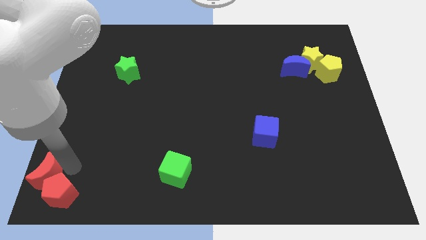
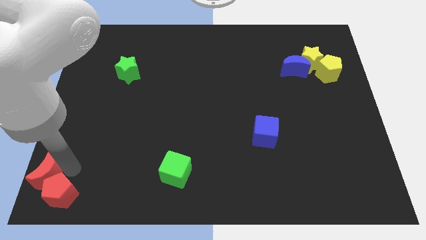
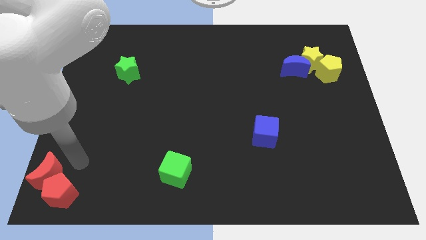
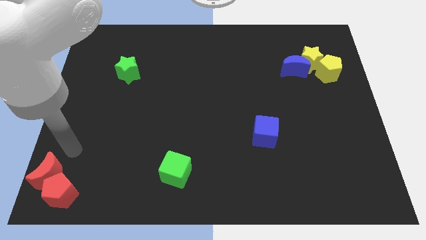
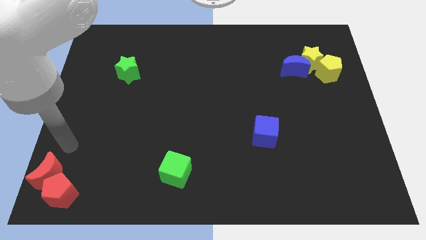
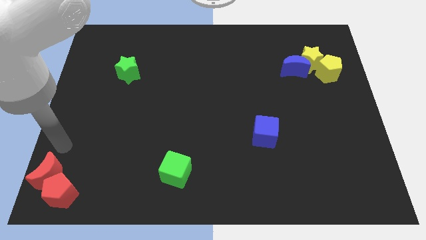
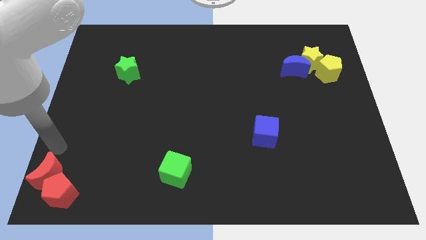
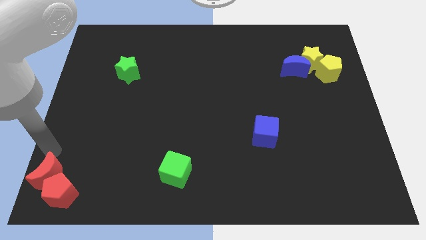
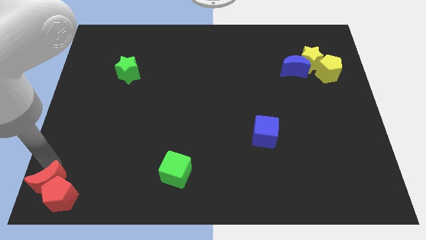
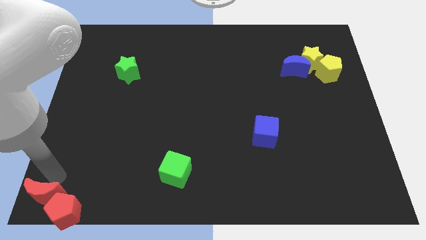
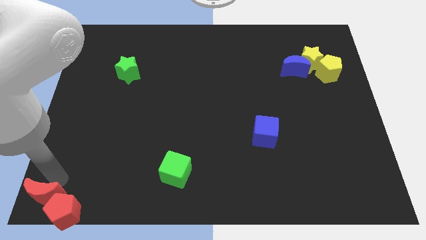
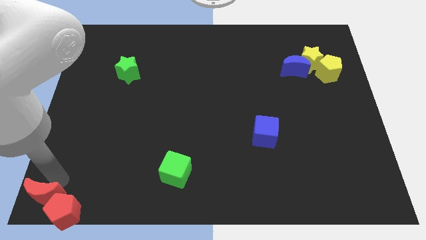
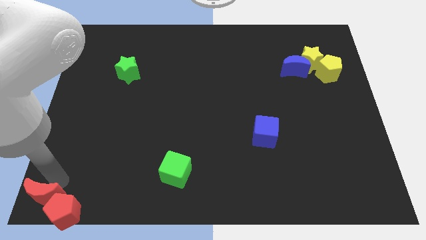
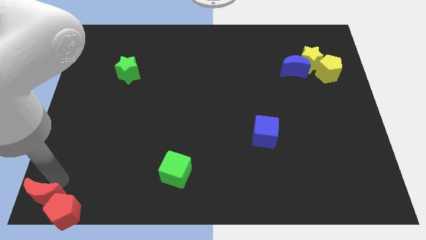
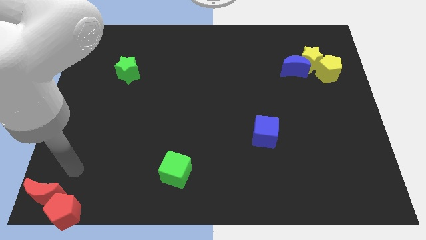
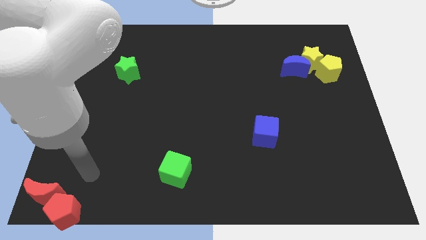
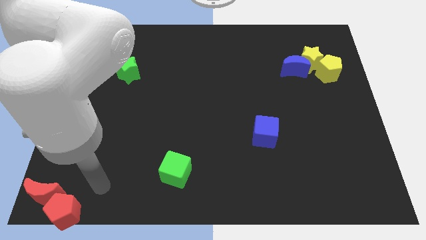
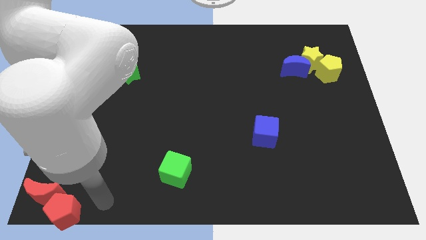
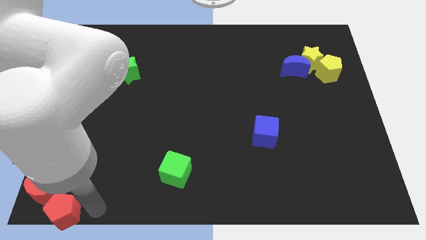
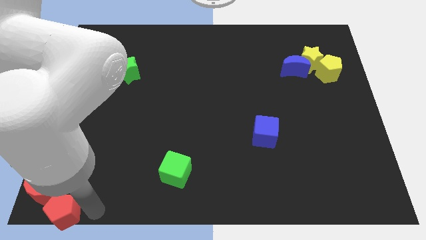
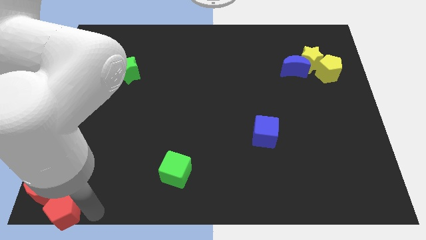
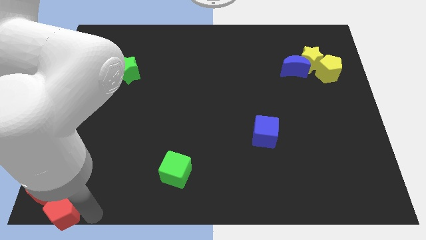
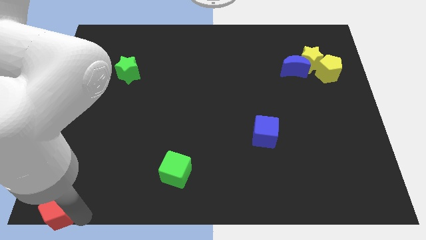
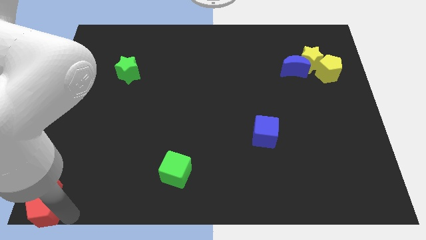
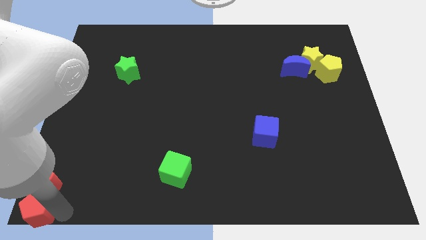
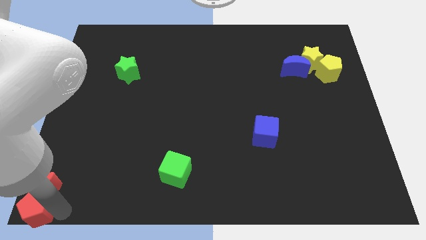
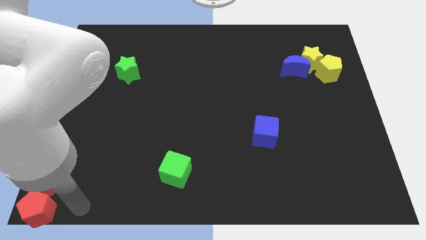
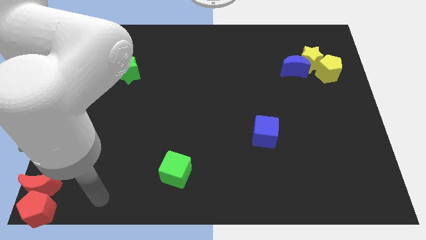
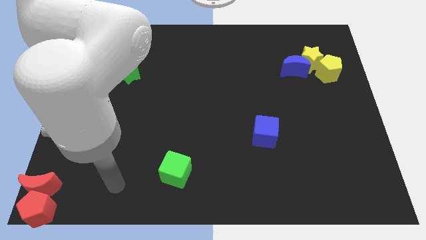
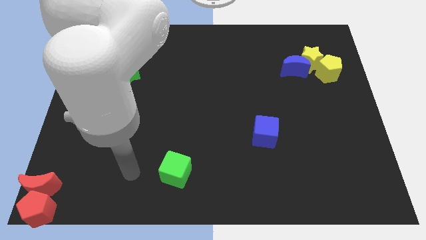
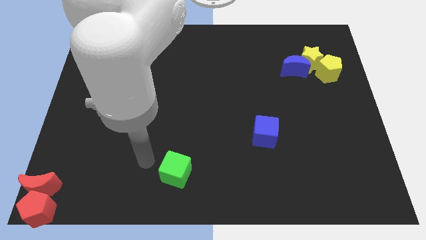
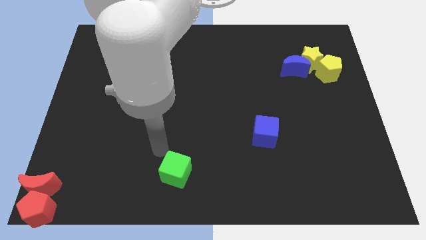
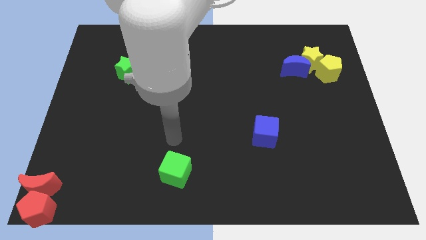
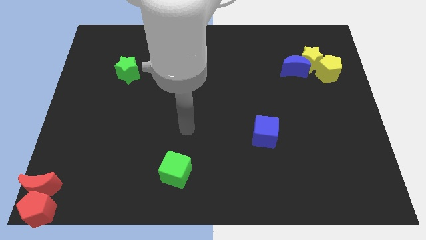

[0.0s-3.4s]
move red blocks to the extreme bottom left

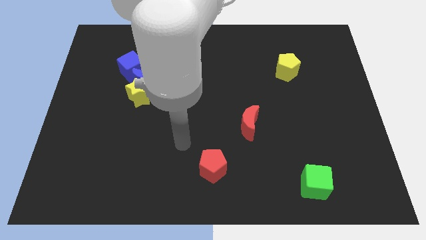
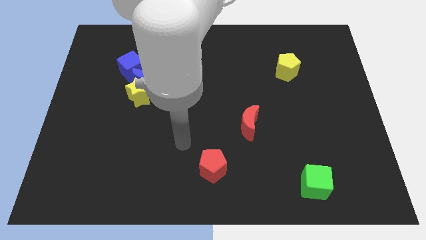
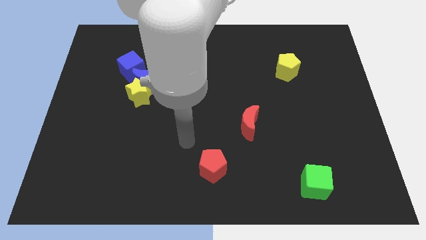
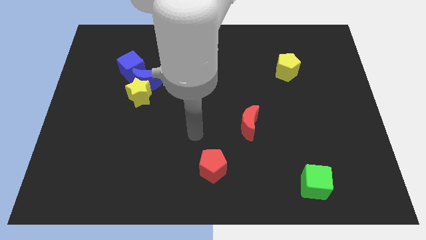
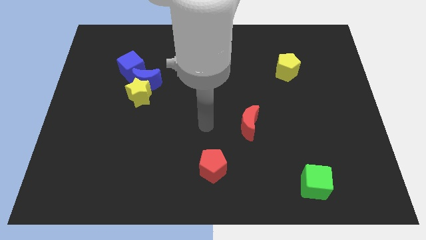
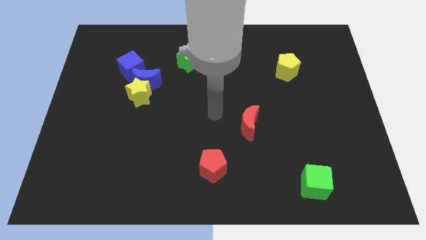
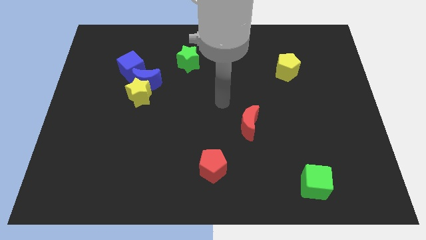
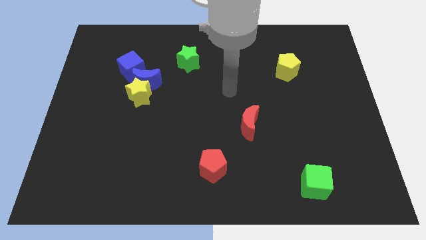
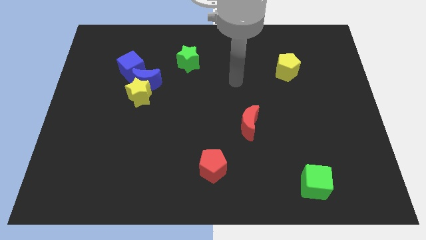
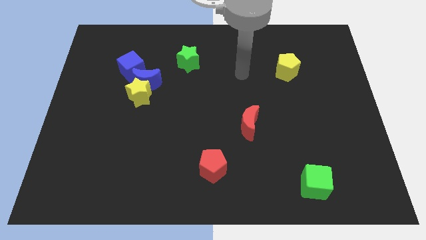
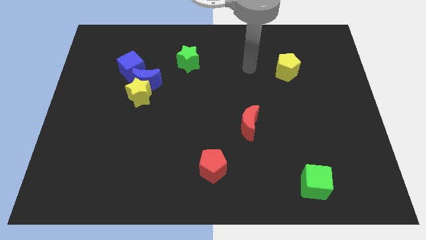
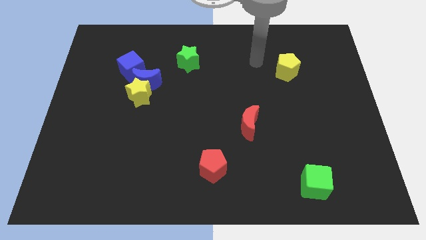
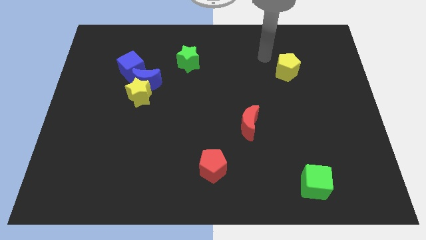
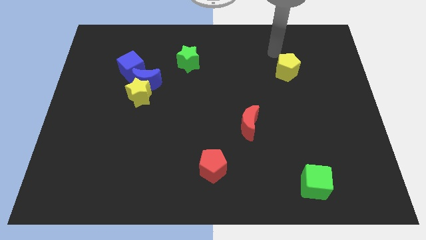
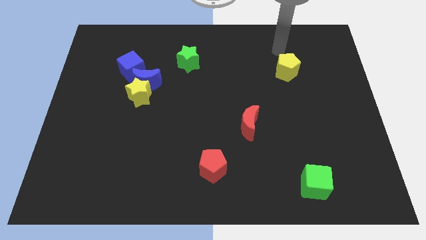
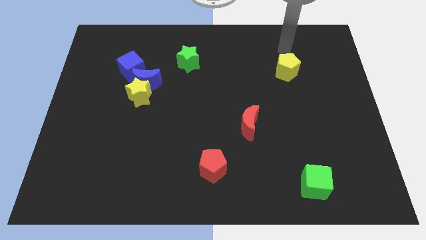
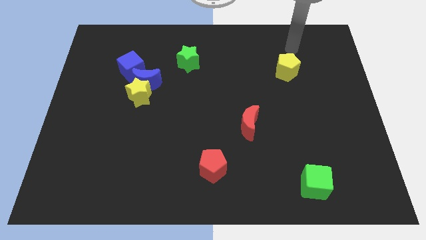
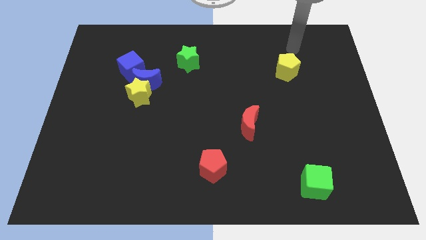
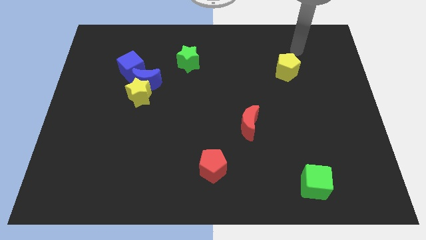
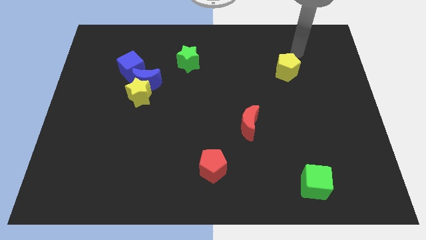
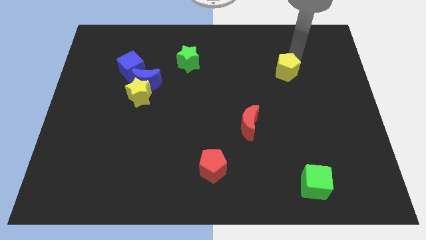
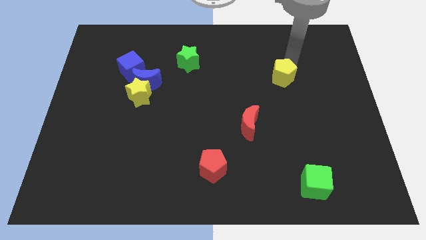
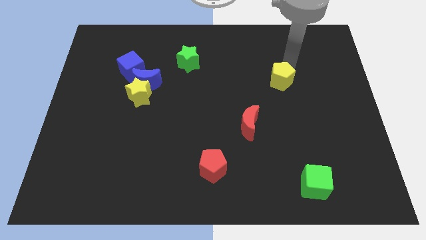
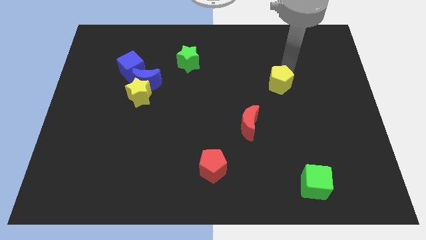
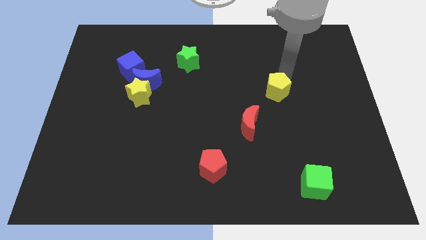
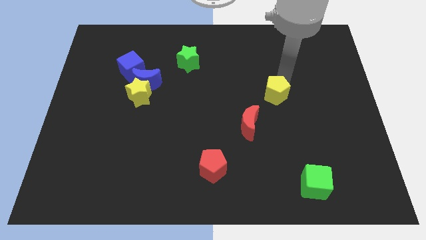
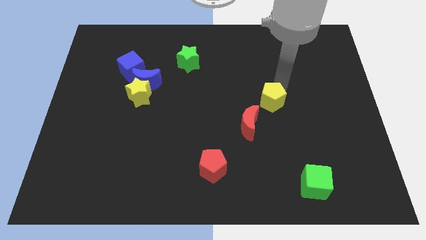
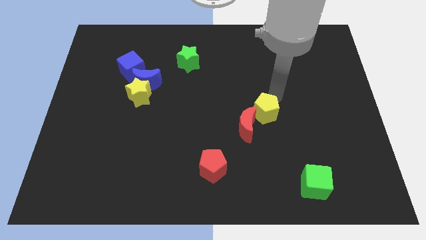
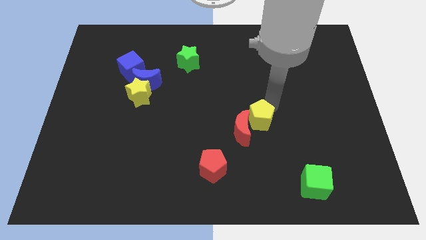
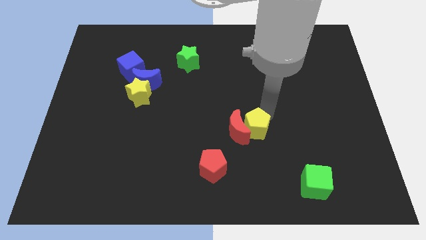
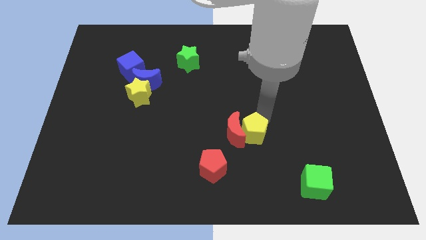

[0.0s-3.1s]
move yellow pentagon into right of the red moon

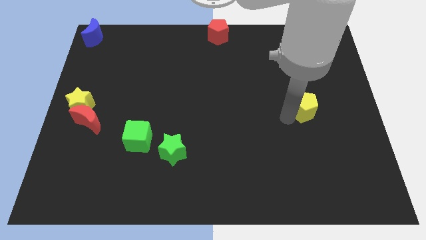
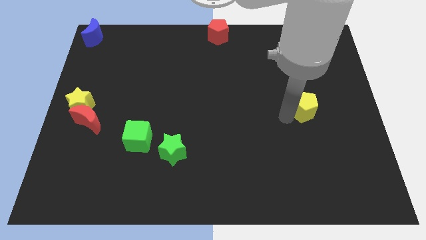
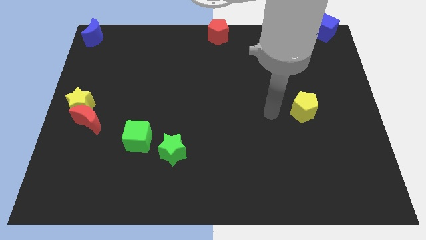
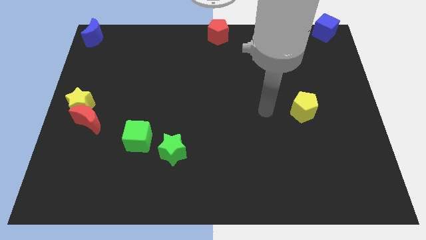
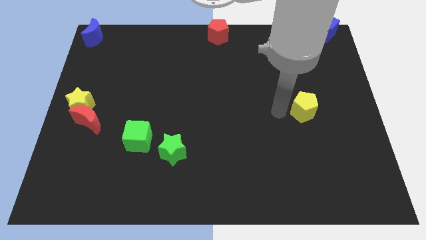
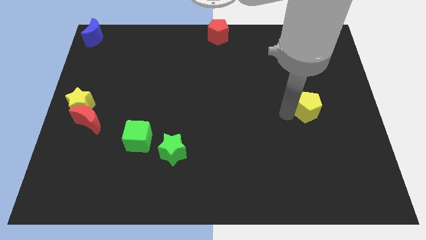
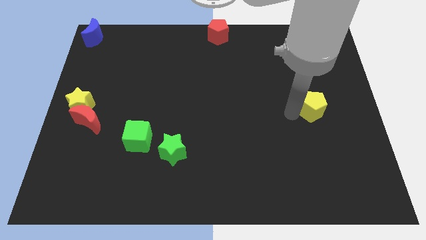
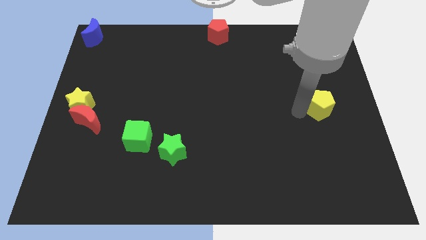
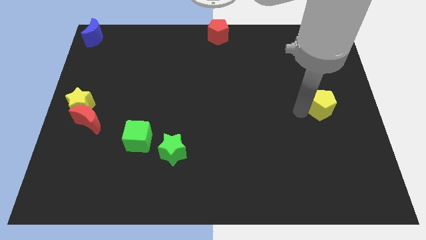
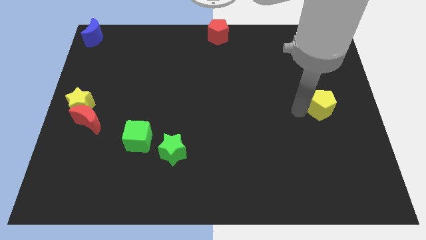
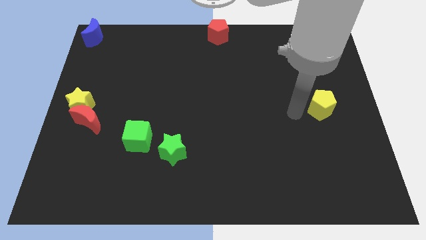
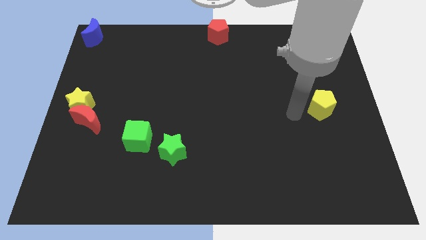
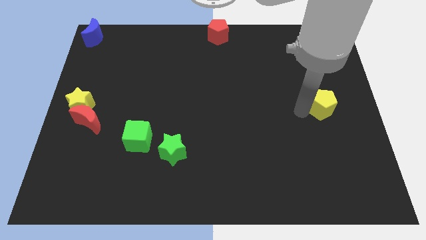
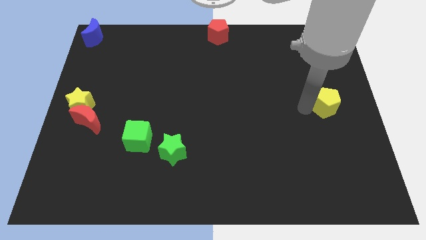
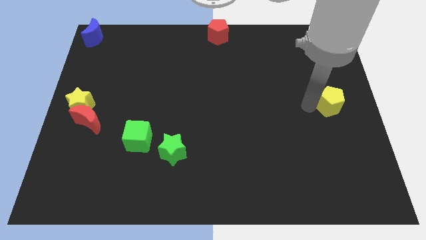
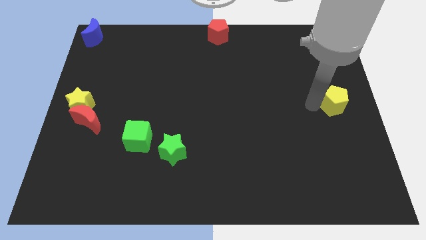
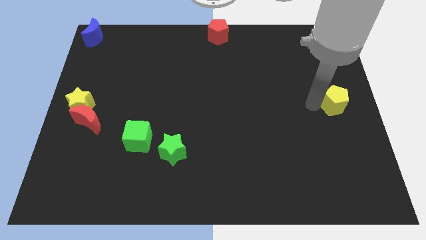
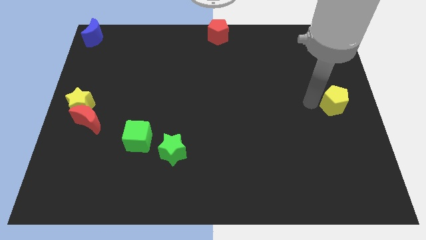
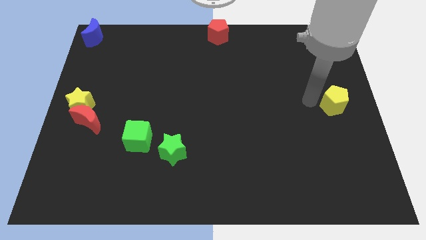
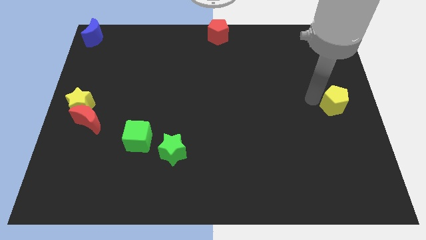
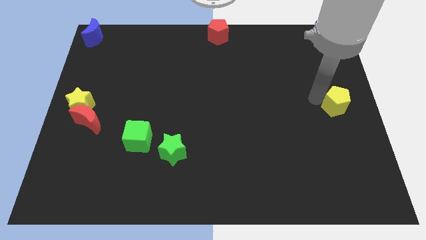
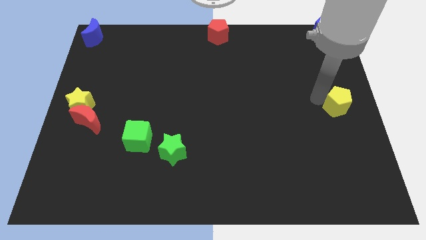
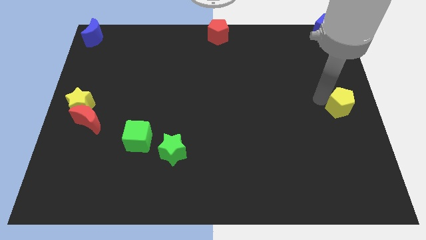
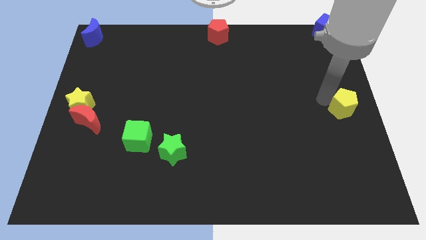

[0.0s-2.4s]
put the yellow pentagon vertically below the blue cube

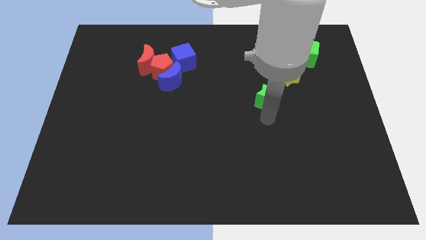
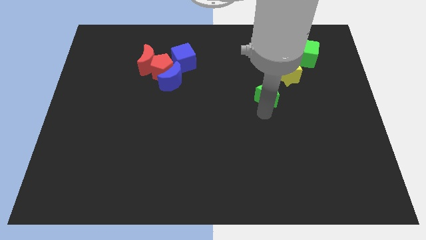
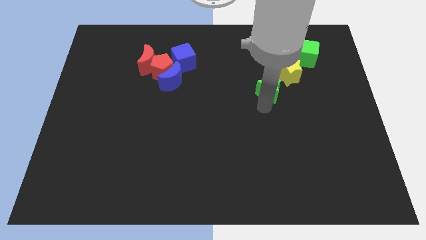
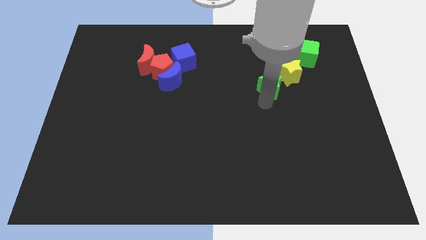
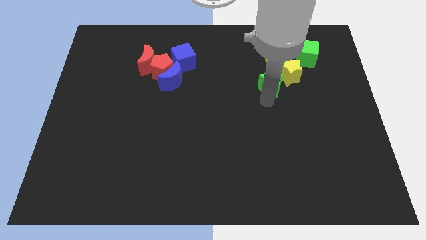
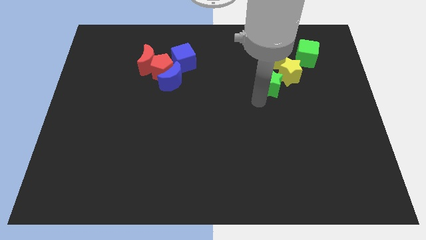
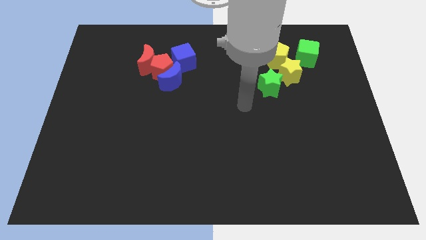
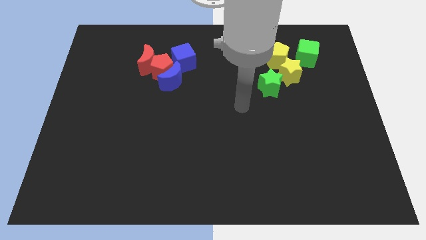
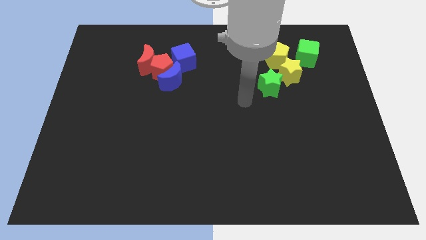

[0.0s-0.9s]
place the green star to the bottom left of the yellow star
